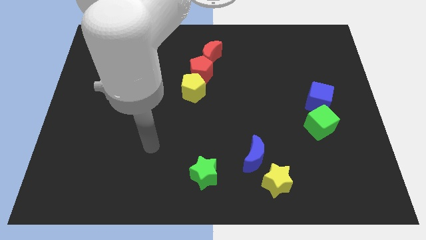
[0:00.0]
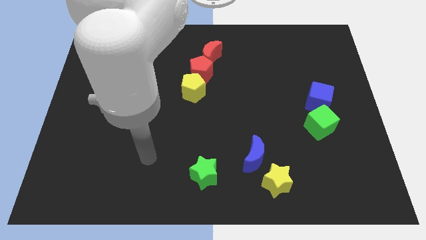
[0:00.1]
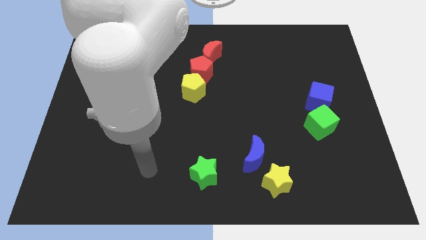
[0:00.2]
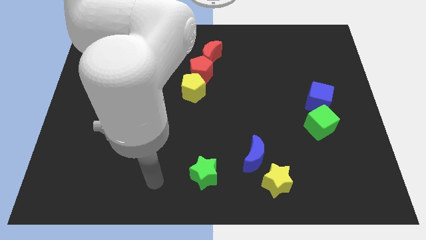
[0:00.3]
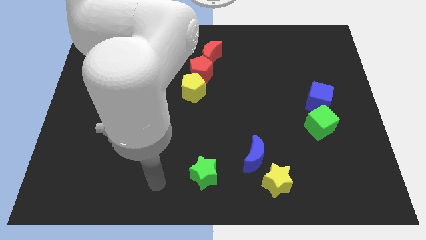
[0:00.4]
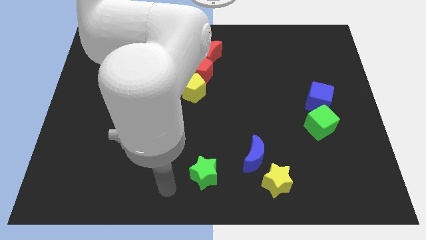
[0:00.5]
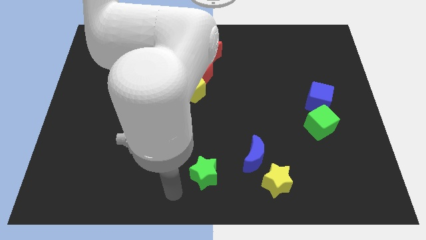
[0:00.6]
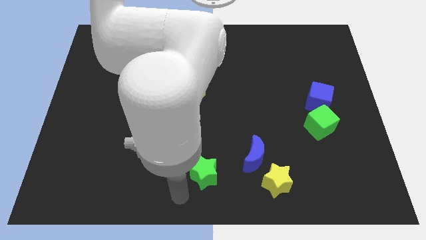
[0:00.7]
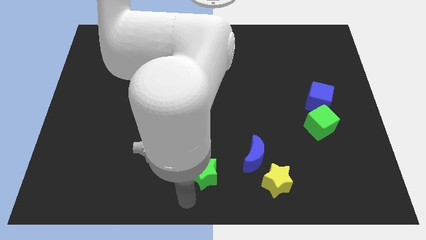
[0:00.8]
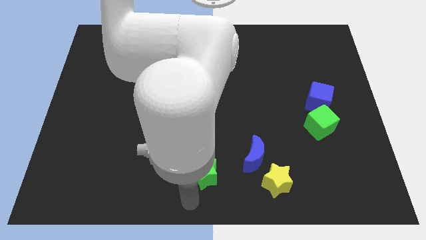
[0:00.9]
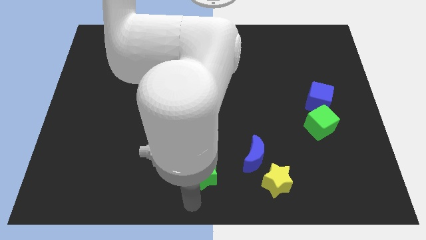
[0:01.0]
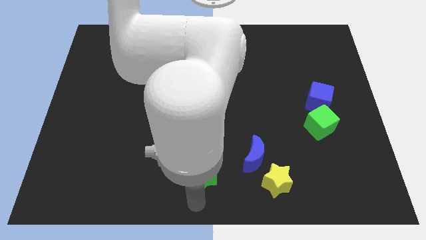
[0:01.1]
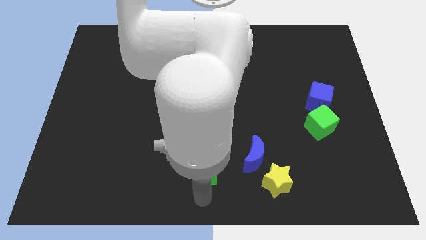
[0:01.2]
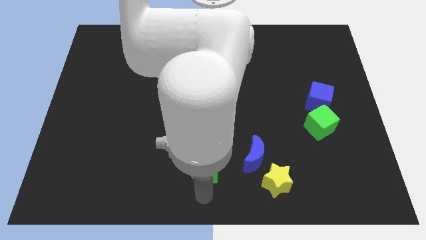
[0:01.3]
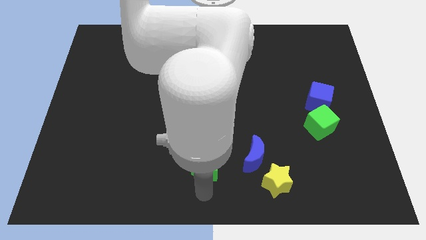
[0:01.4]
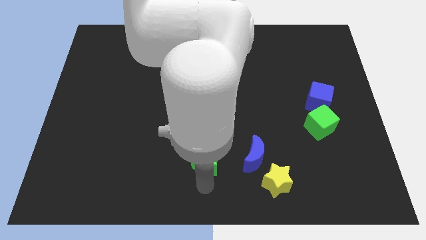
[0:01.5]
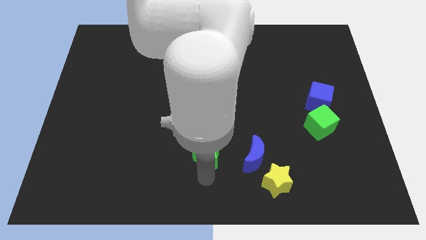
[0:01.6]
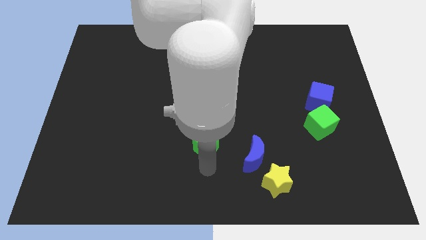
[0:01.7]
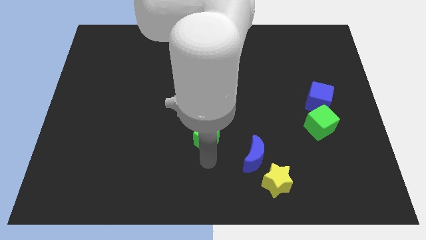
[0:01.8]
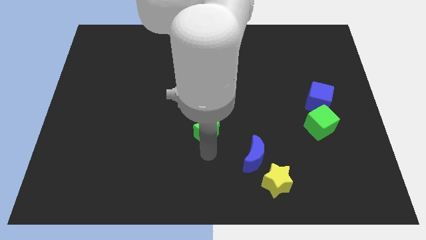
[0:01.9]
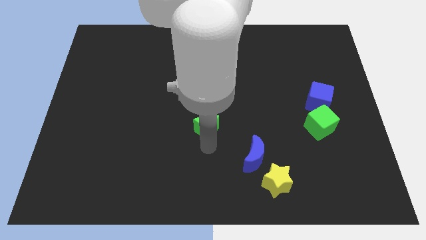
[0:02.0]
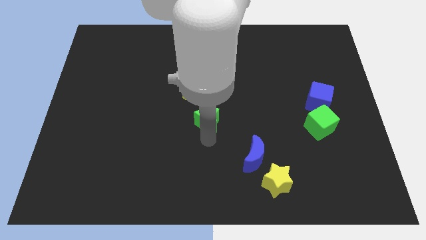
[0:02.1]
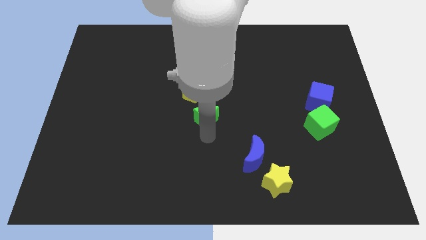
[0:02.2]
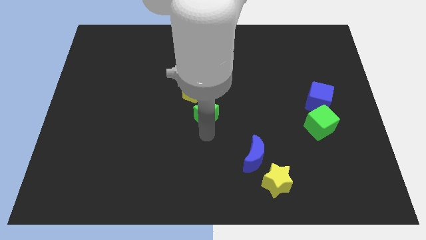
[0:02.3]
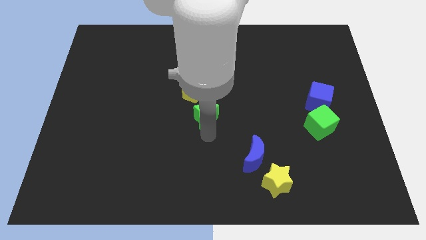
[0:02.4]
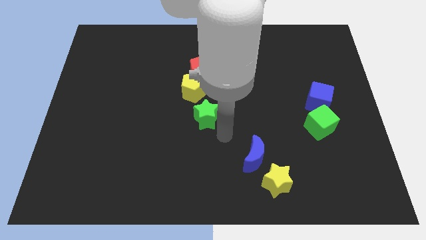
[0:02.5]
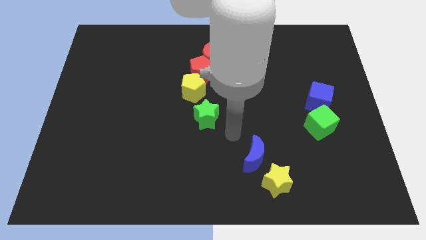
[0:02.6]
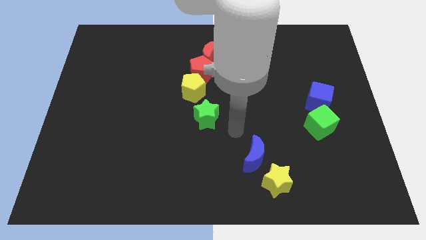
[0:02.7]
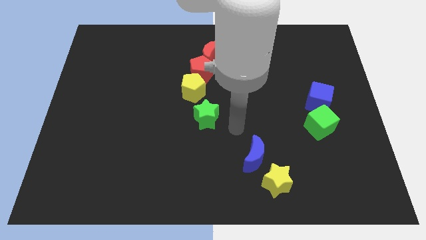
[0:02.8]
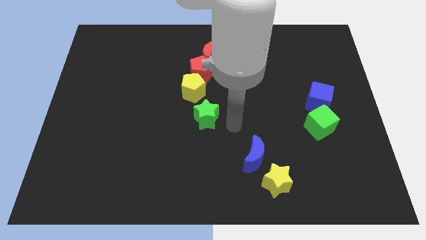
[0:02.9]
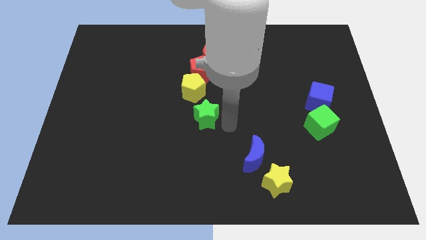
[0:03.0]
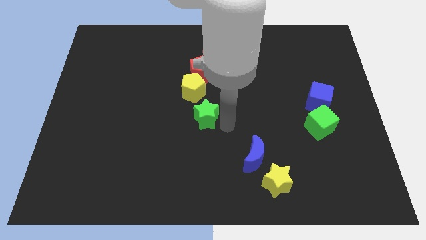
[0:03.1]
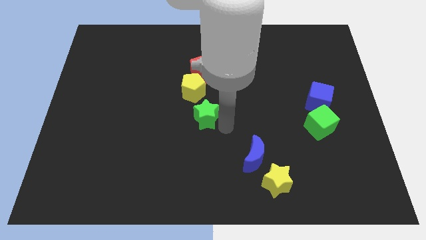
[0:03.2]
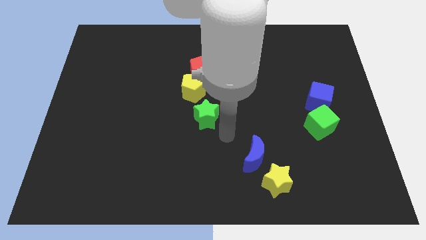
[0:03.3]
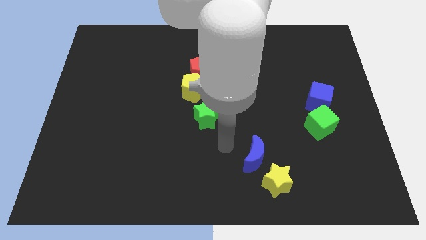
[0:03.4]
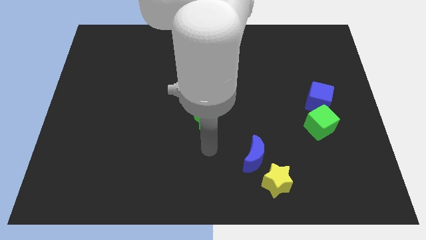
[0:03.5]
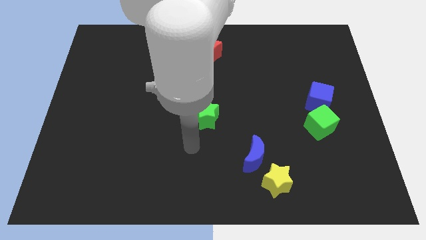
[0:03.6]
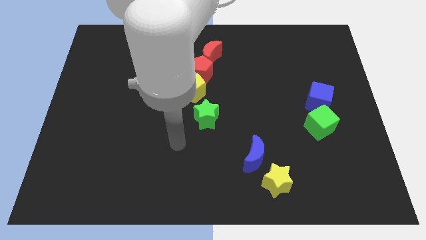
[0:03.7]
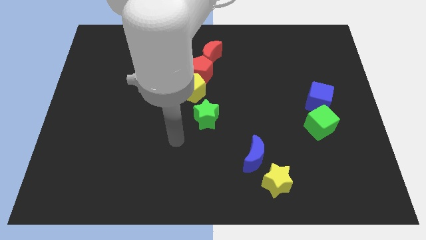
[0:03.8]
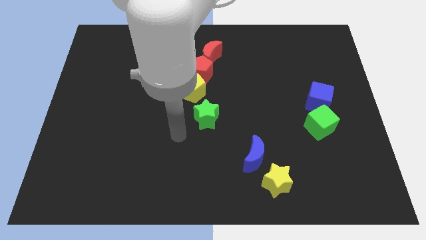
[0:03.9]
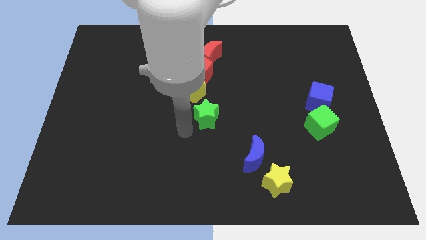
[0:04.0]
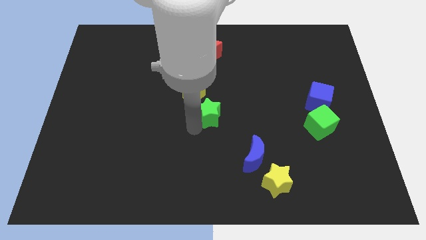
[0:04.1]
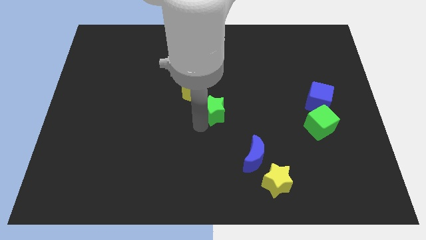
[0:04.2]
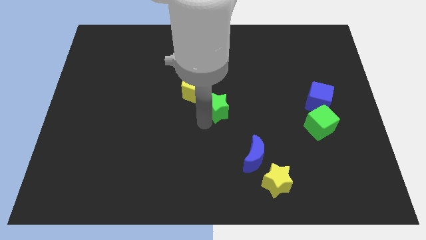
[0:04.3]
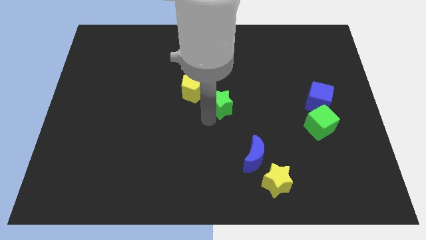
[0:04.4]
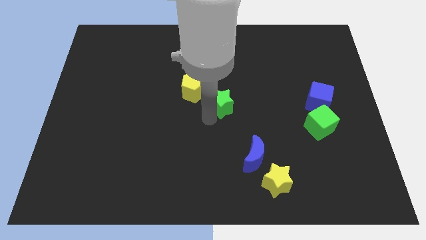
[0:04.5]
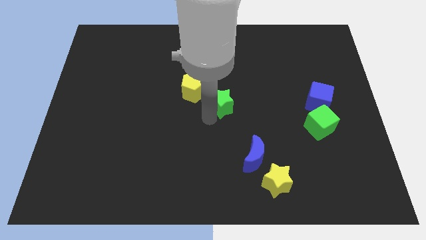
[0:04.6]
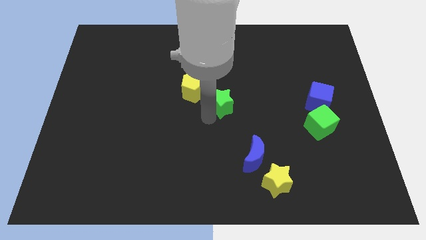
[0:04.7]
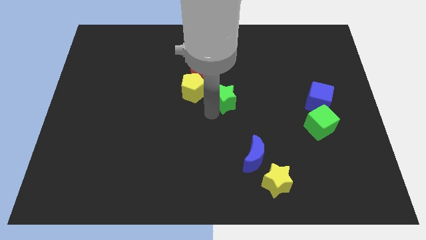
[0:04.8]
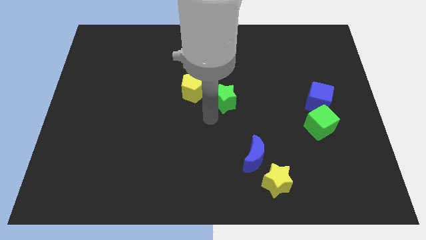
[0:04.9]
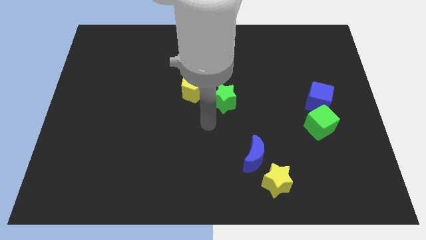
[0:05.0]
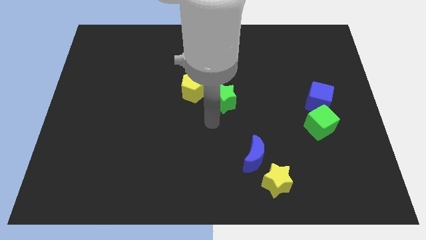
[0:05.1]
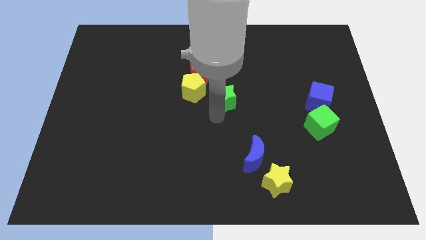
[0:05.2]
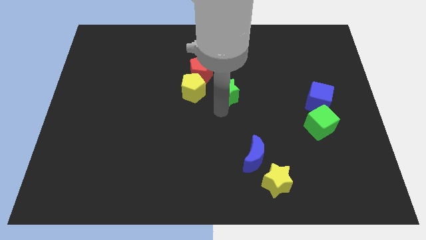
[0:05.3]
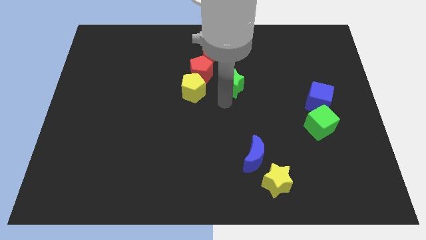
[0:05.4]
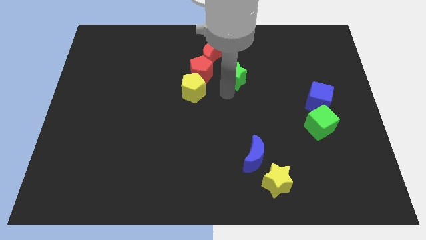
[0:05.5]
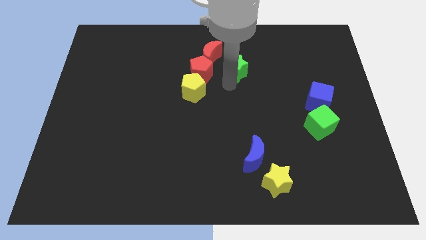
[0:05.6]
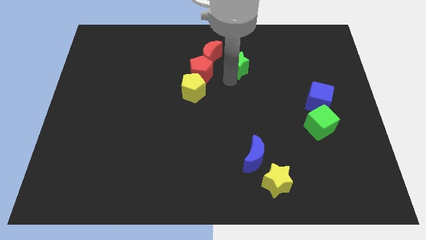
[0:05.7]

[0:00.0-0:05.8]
place the green star above the blue moon

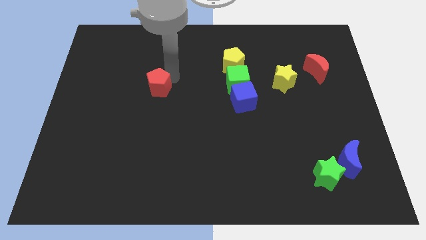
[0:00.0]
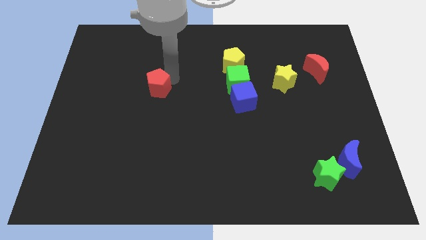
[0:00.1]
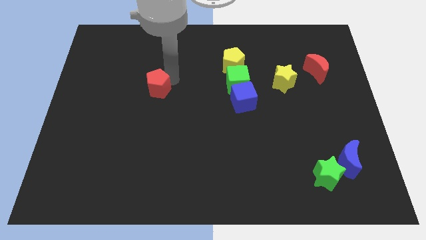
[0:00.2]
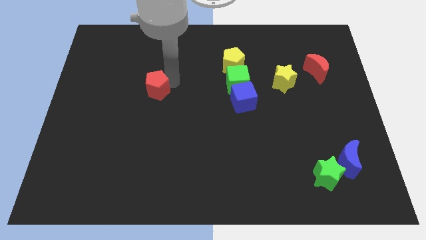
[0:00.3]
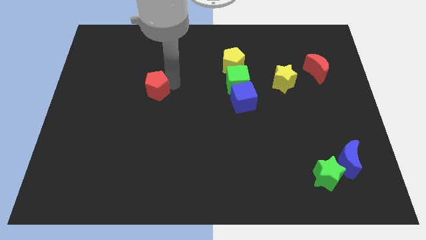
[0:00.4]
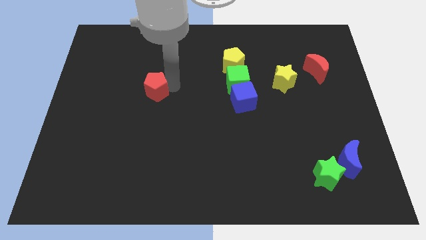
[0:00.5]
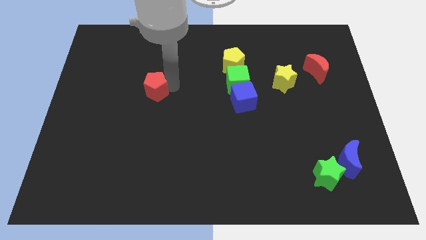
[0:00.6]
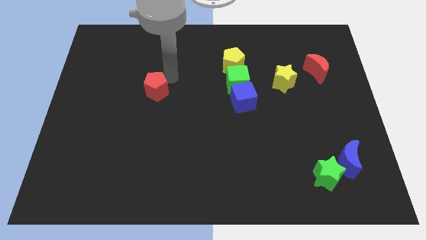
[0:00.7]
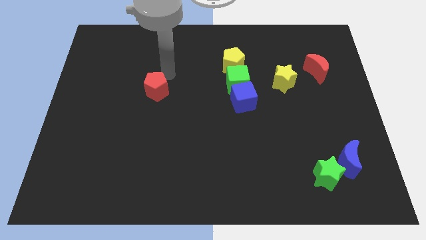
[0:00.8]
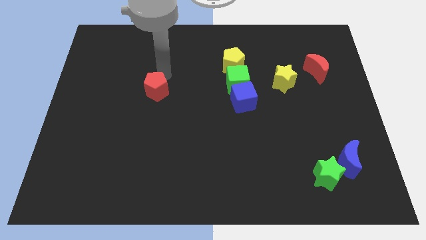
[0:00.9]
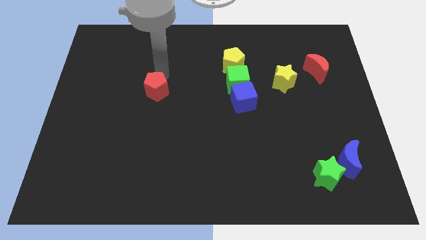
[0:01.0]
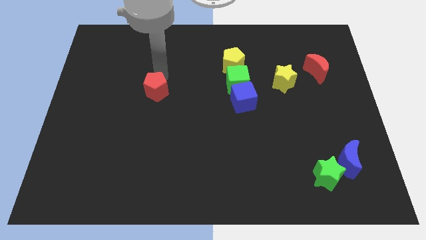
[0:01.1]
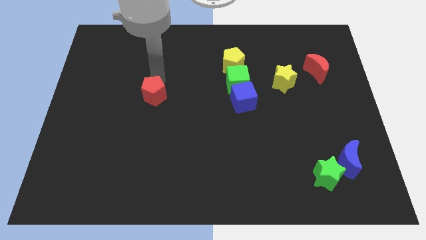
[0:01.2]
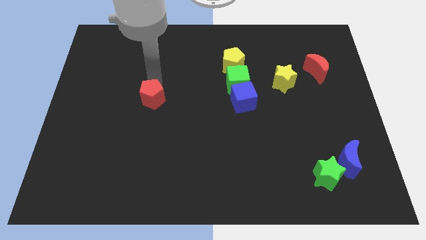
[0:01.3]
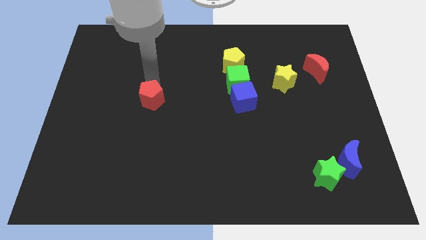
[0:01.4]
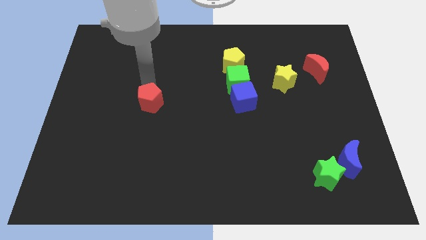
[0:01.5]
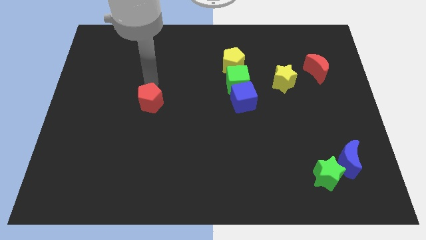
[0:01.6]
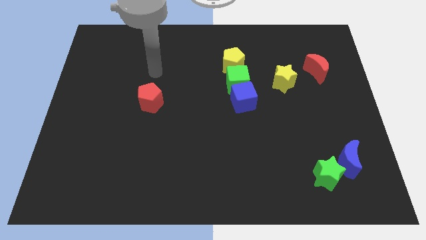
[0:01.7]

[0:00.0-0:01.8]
push the red pentagon to the left of the blue cube

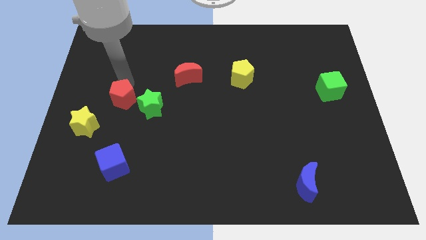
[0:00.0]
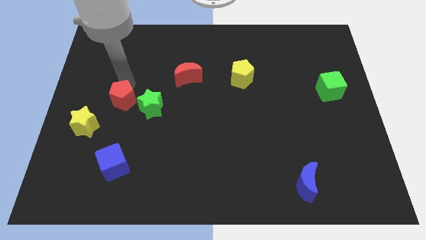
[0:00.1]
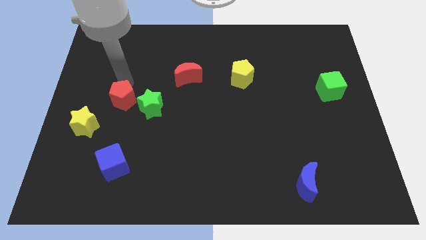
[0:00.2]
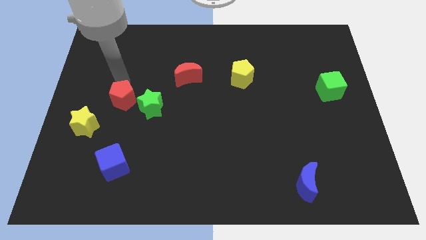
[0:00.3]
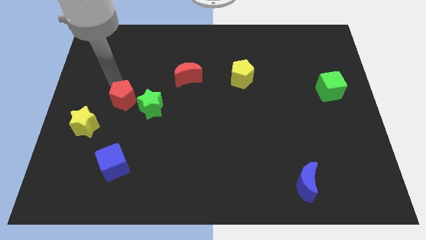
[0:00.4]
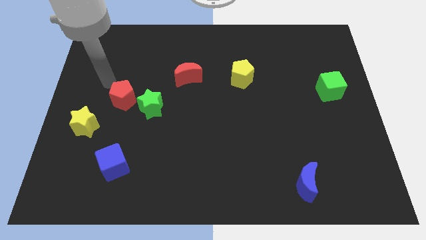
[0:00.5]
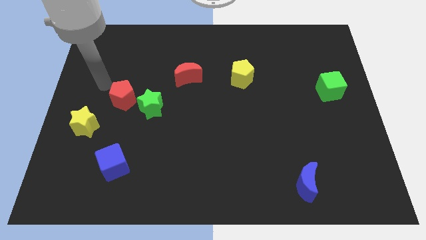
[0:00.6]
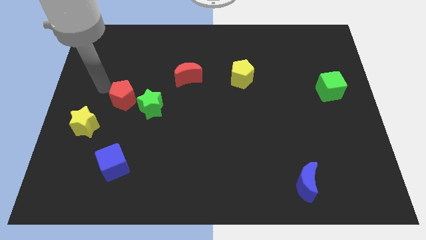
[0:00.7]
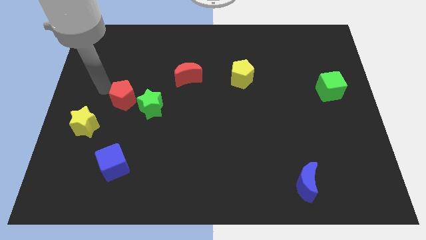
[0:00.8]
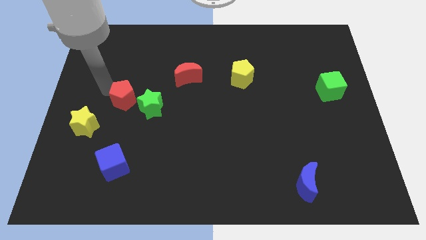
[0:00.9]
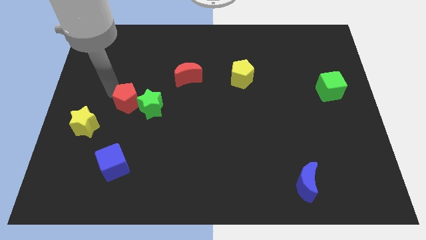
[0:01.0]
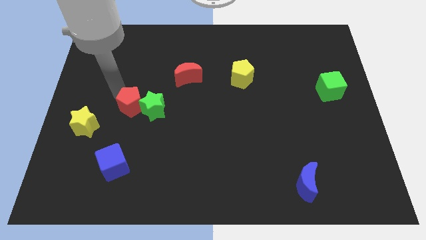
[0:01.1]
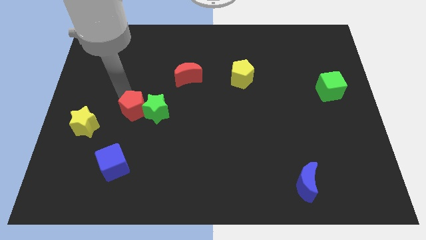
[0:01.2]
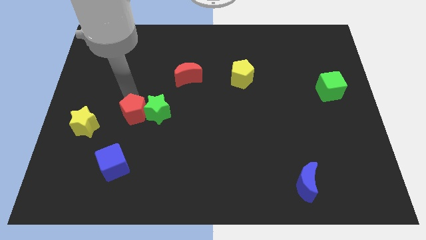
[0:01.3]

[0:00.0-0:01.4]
move the red pentagon into the green star

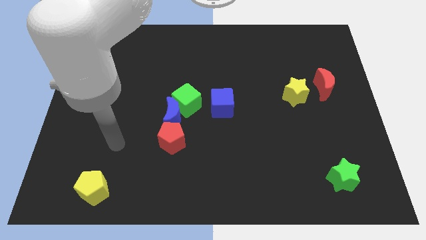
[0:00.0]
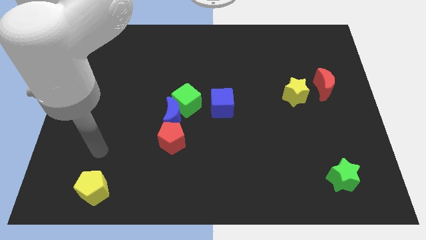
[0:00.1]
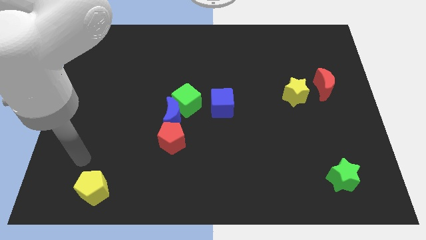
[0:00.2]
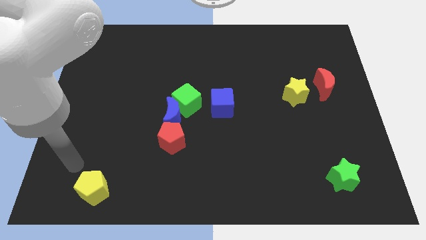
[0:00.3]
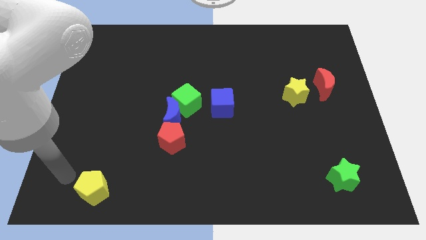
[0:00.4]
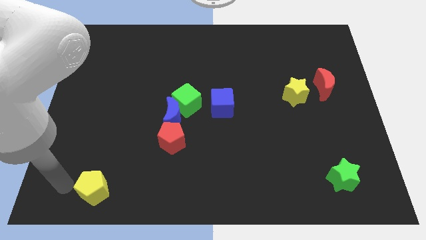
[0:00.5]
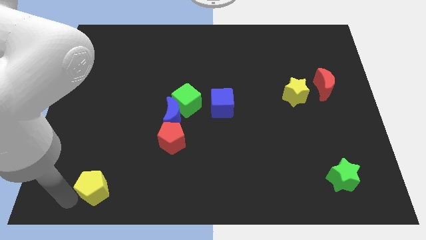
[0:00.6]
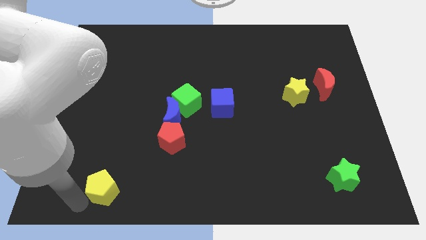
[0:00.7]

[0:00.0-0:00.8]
touch the bottom of yellow pentagon
